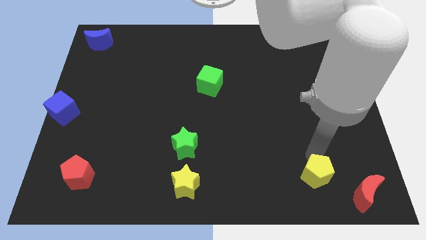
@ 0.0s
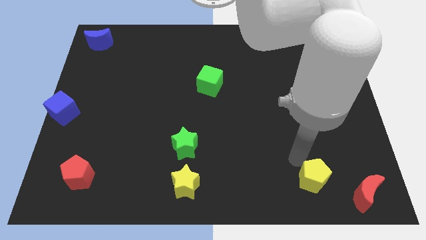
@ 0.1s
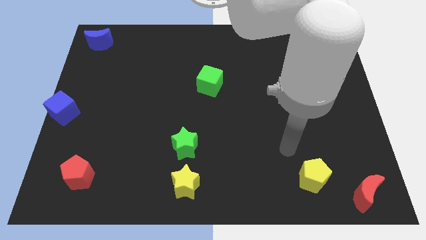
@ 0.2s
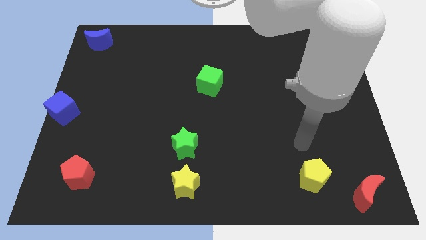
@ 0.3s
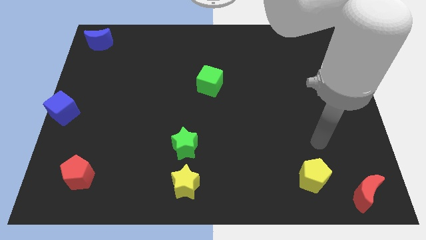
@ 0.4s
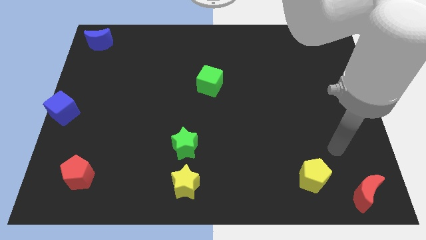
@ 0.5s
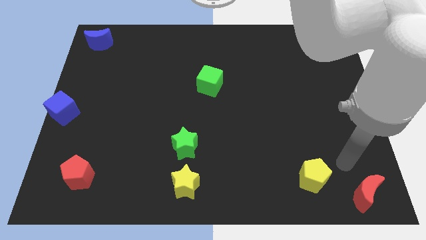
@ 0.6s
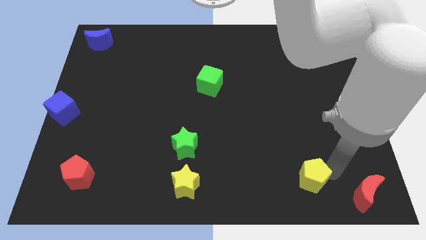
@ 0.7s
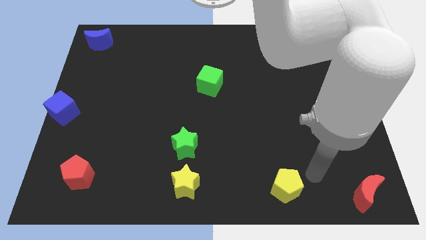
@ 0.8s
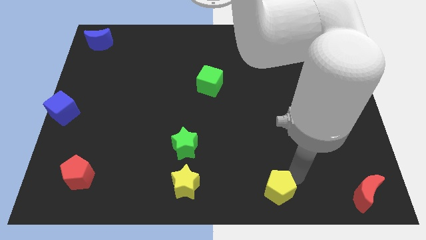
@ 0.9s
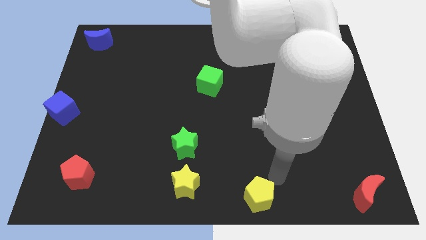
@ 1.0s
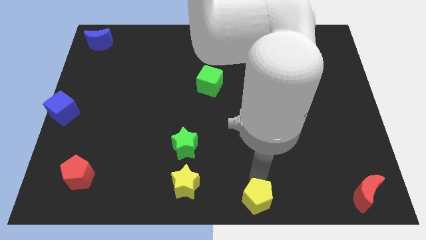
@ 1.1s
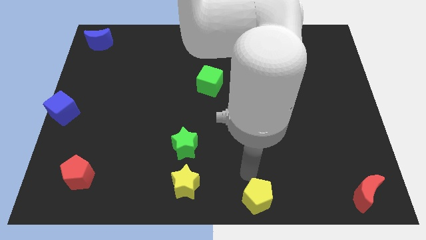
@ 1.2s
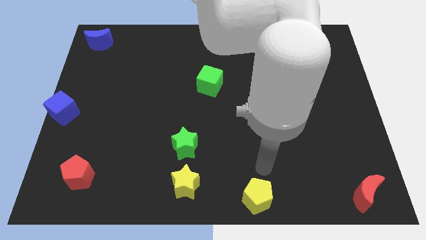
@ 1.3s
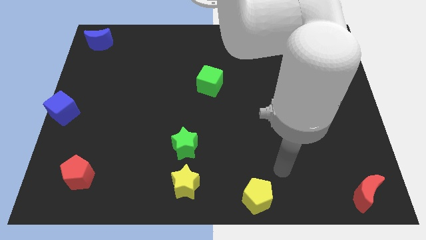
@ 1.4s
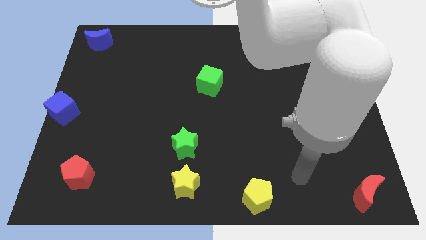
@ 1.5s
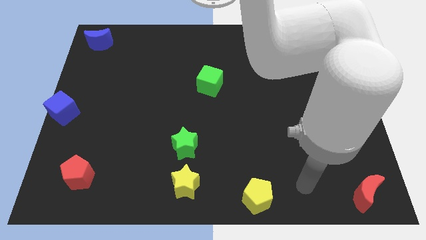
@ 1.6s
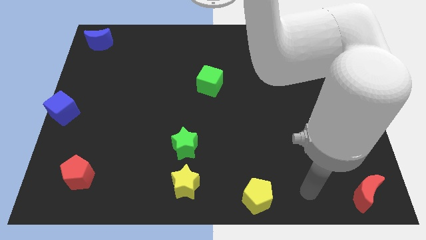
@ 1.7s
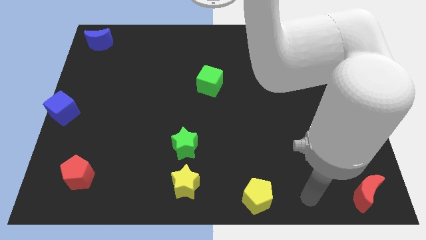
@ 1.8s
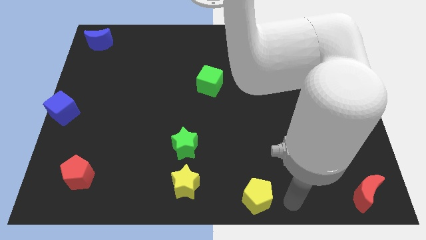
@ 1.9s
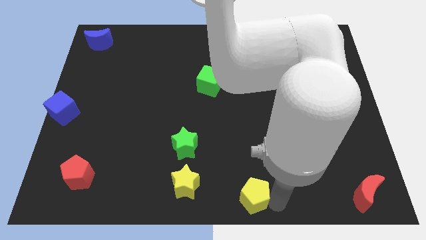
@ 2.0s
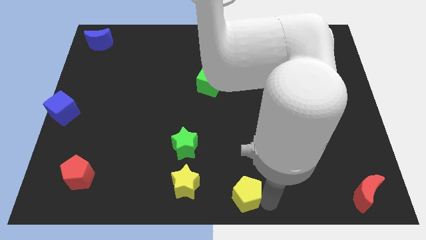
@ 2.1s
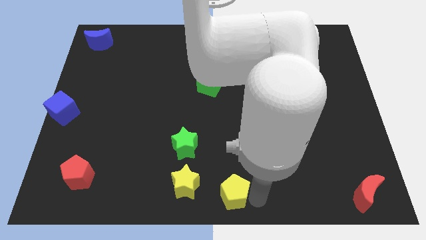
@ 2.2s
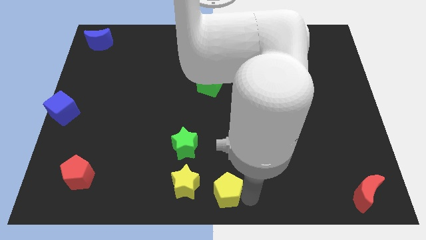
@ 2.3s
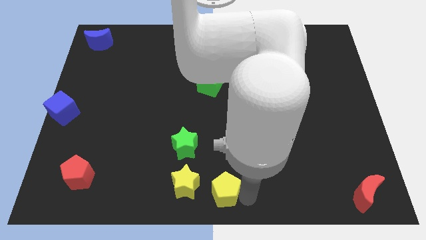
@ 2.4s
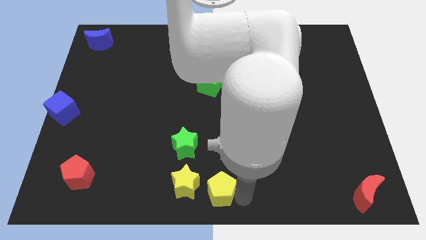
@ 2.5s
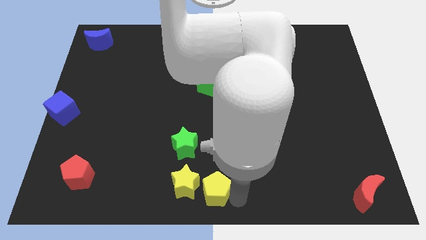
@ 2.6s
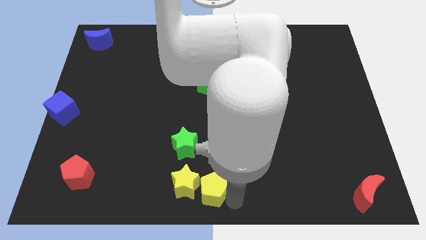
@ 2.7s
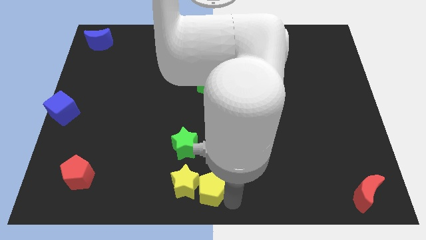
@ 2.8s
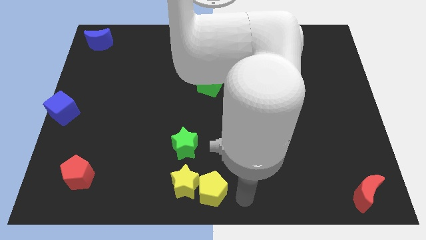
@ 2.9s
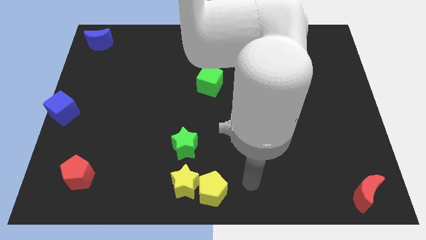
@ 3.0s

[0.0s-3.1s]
add yellow pentagon into yellow star

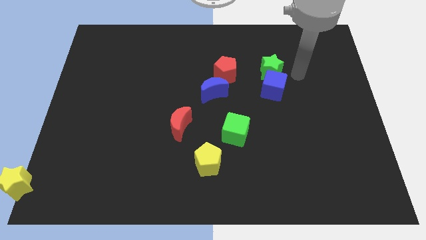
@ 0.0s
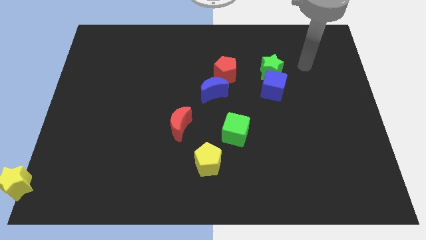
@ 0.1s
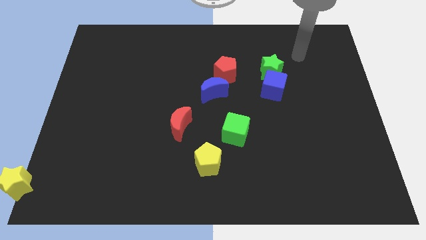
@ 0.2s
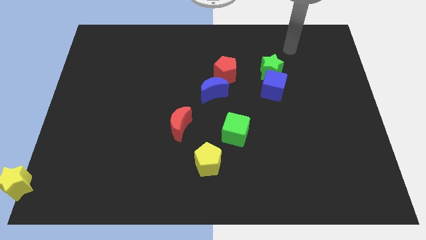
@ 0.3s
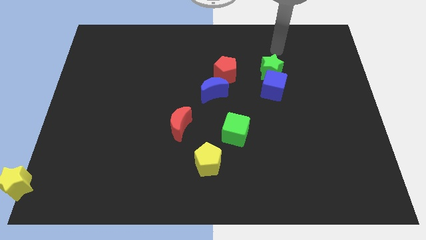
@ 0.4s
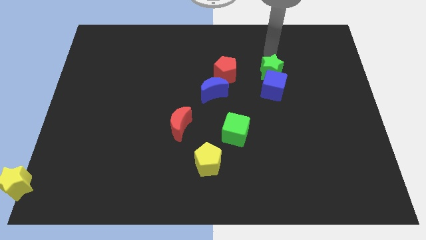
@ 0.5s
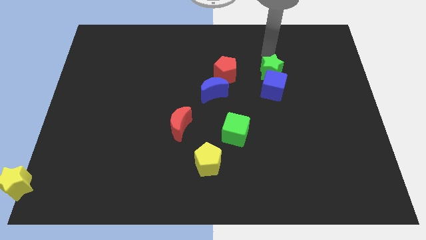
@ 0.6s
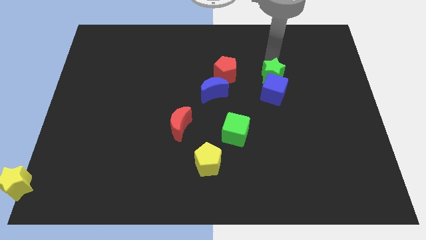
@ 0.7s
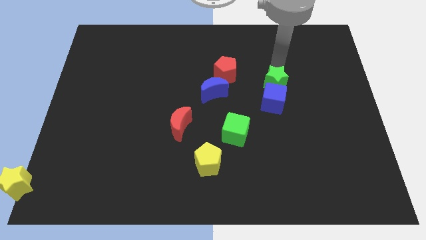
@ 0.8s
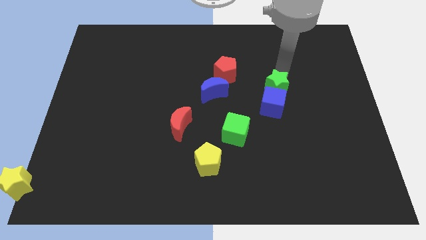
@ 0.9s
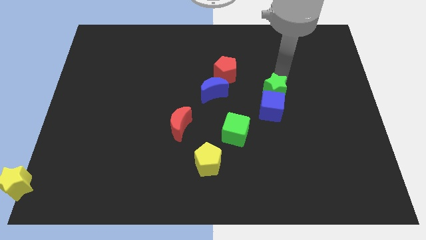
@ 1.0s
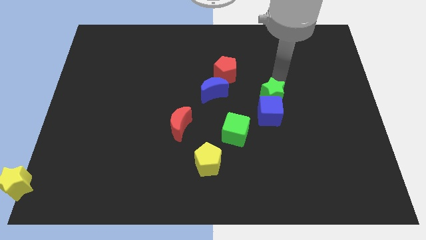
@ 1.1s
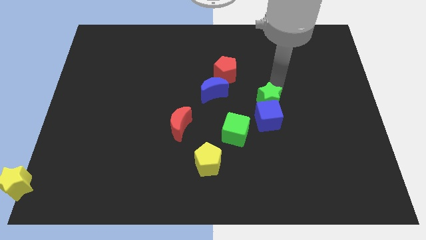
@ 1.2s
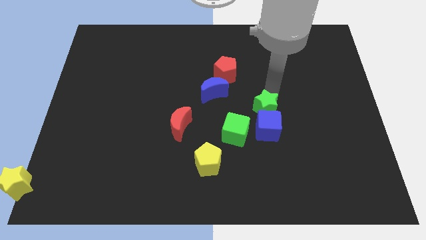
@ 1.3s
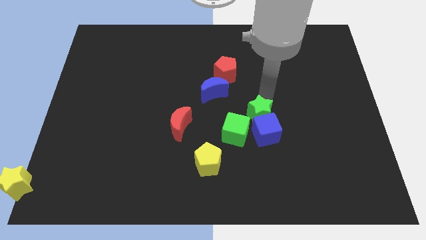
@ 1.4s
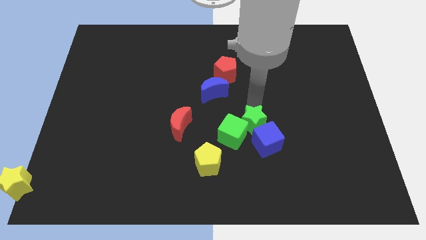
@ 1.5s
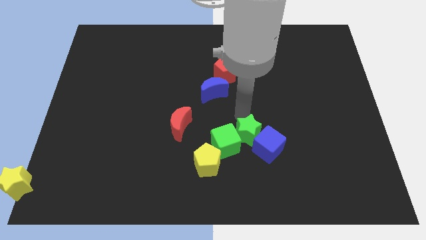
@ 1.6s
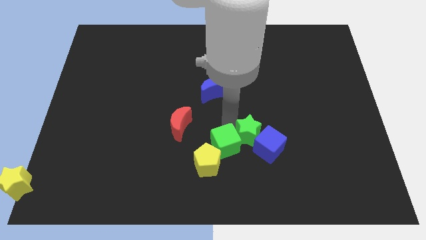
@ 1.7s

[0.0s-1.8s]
place green star near green cube

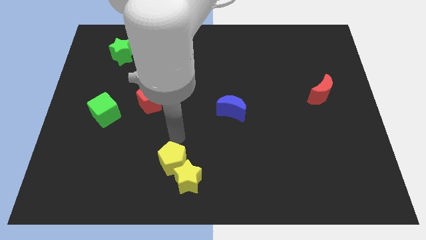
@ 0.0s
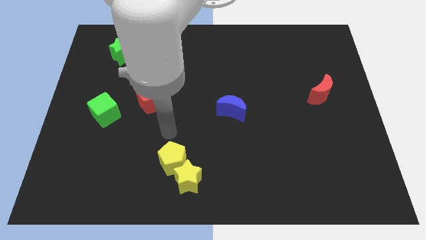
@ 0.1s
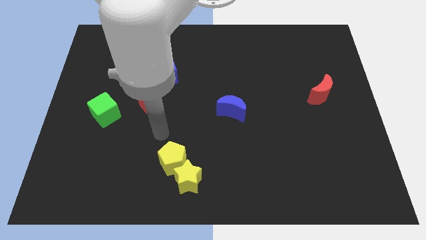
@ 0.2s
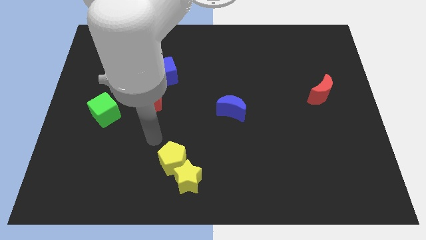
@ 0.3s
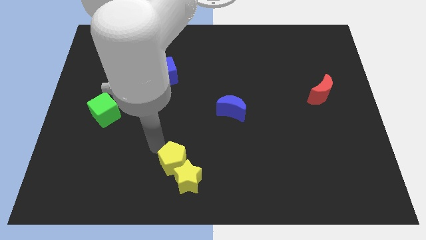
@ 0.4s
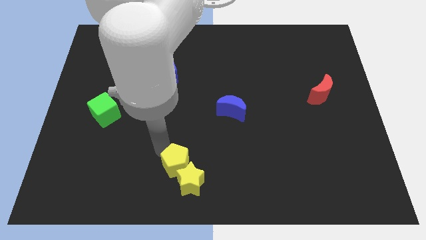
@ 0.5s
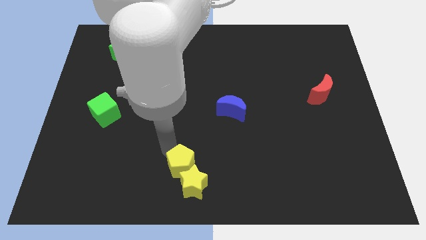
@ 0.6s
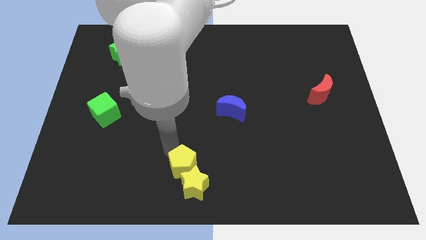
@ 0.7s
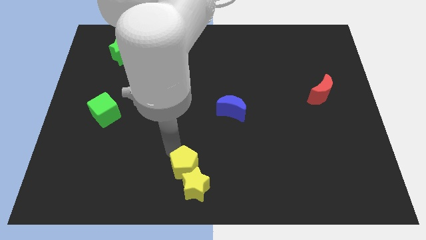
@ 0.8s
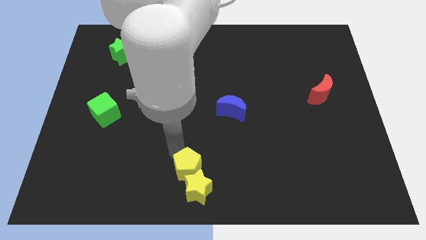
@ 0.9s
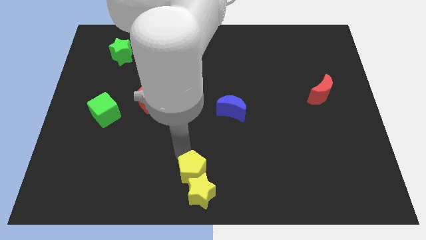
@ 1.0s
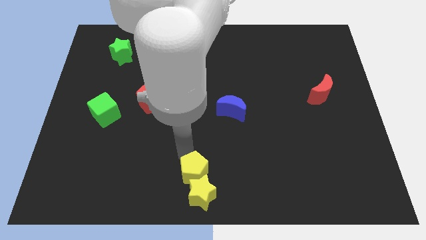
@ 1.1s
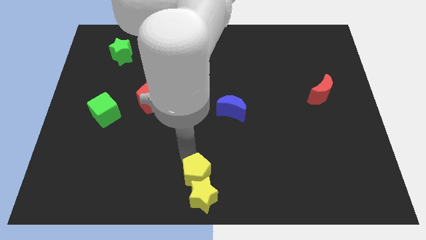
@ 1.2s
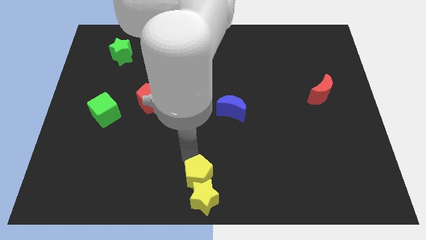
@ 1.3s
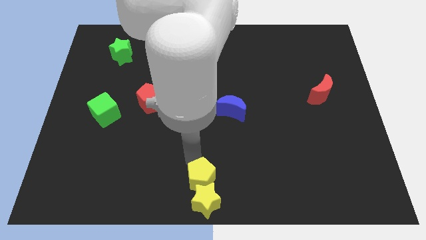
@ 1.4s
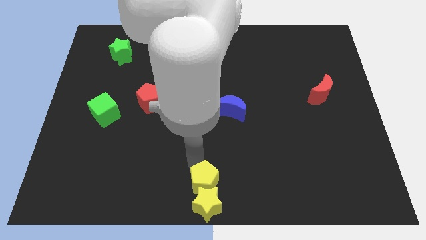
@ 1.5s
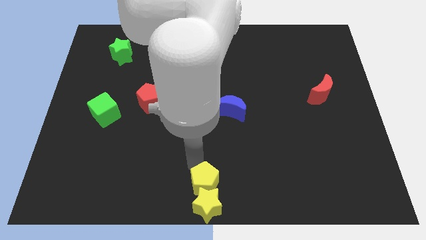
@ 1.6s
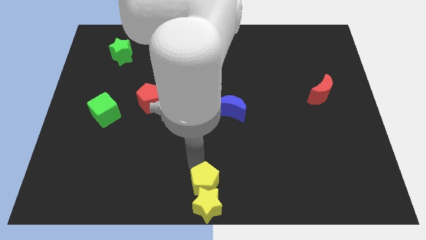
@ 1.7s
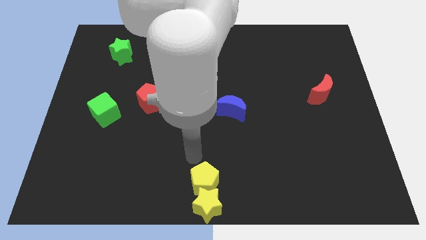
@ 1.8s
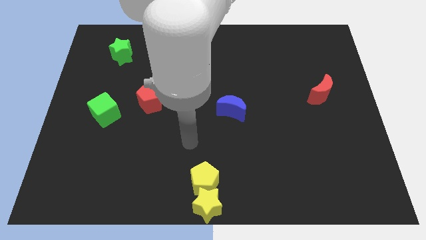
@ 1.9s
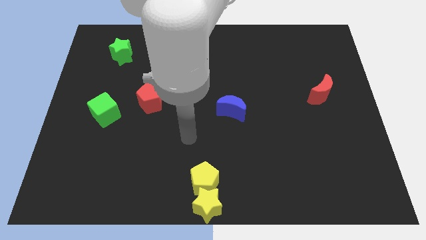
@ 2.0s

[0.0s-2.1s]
place yellow pentagon and yellow star to the bottom of the board

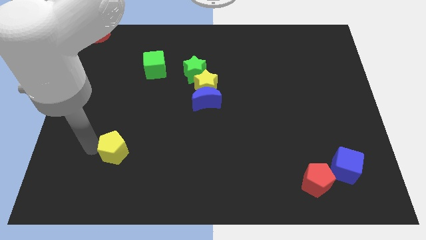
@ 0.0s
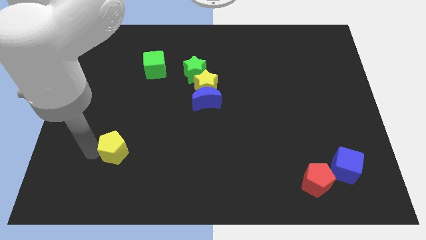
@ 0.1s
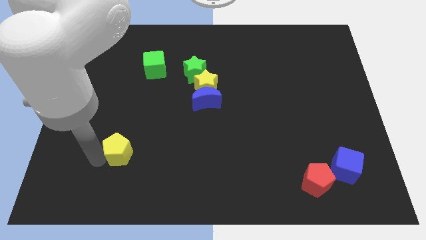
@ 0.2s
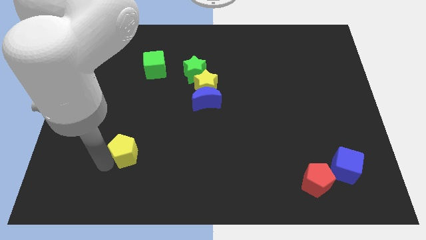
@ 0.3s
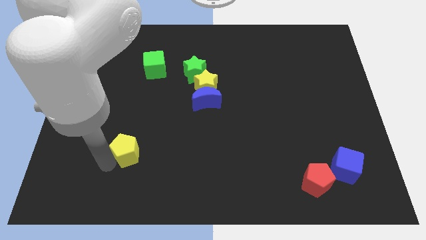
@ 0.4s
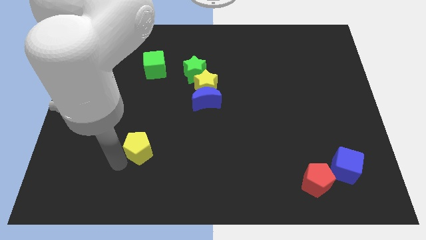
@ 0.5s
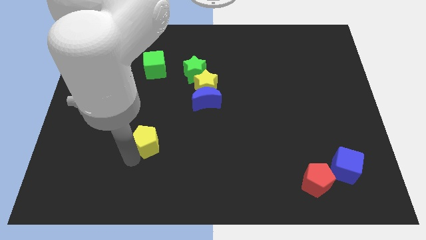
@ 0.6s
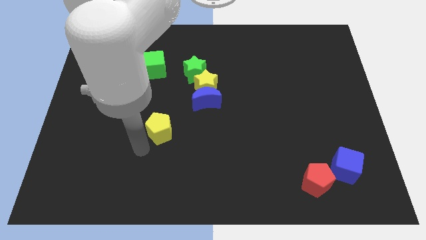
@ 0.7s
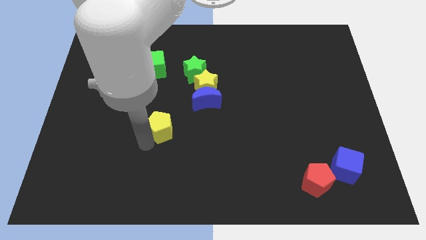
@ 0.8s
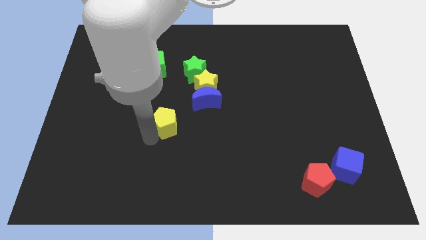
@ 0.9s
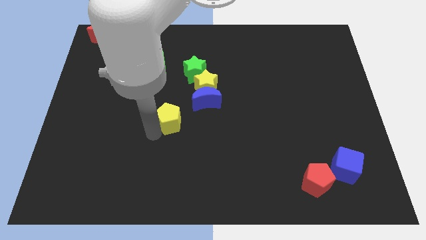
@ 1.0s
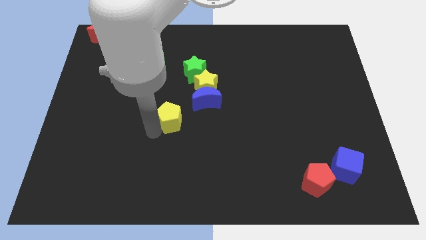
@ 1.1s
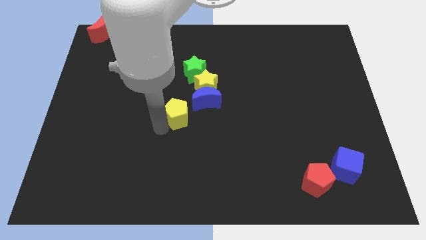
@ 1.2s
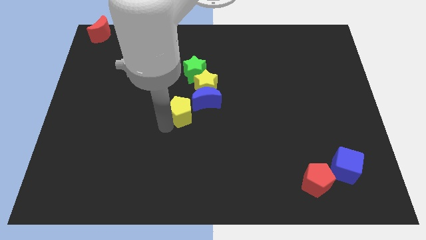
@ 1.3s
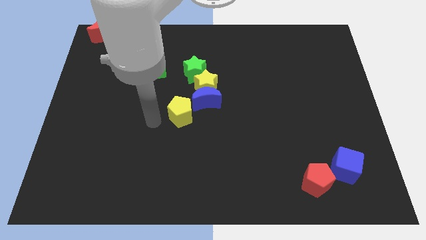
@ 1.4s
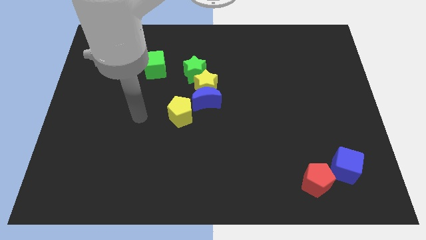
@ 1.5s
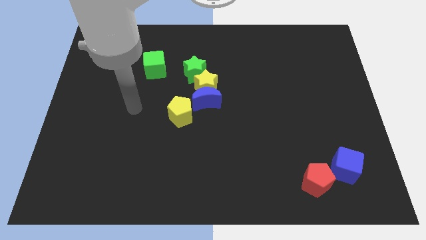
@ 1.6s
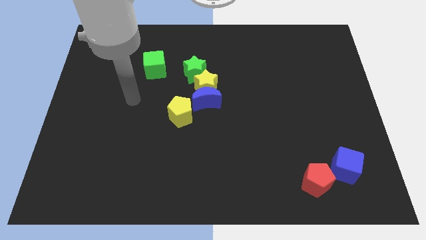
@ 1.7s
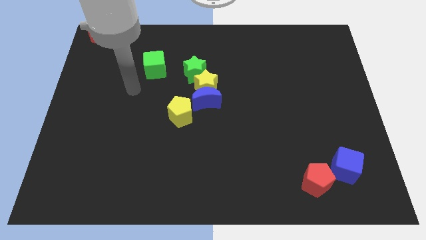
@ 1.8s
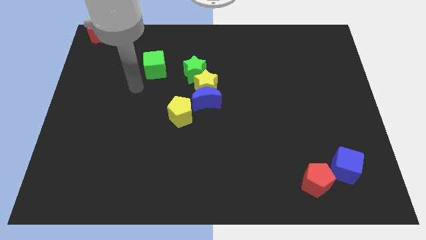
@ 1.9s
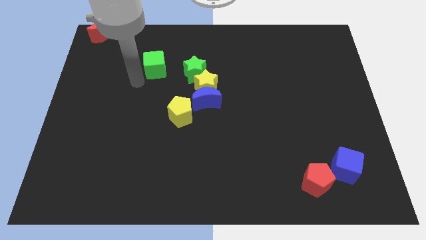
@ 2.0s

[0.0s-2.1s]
place the yellow pentagon to the left side of the blue crescent
